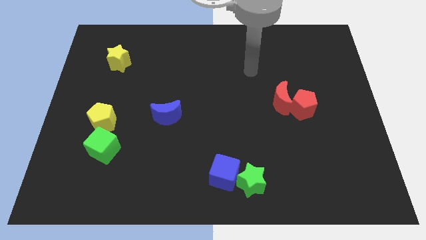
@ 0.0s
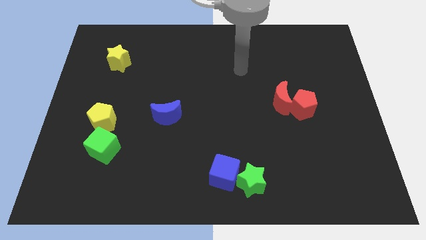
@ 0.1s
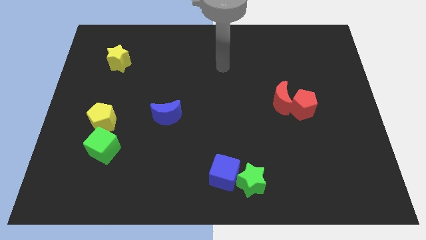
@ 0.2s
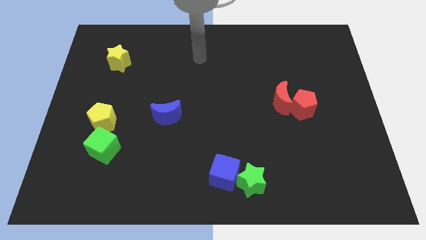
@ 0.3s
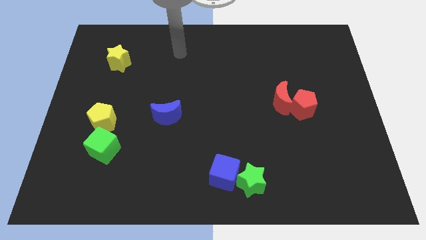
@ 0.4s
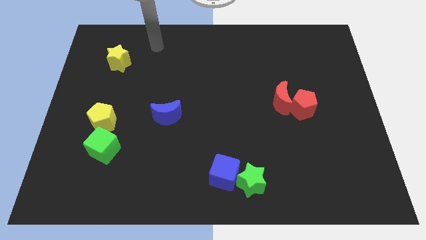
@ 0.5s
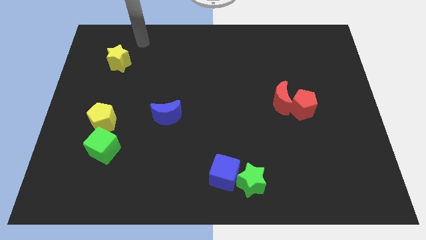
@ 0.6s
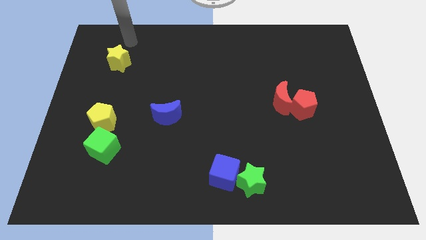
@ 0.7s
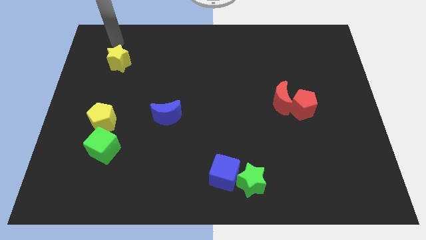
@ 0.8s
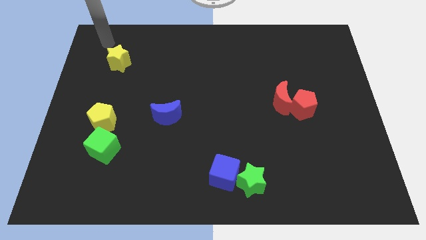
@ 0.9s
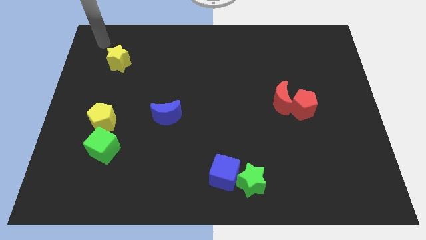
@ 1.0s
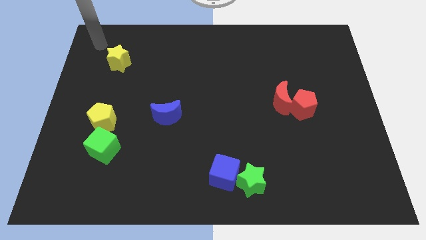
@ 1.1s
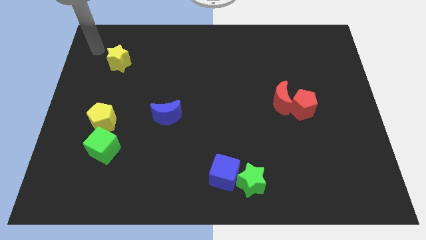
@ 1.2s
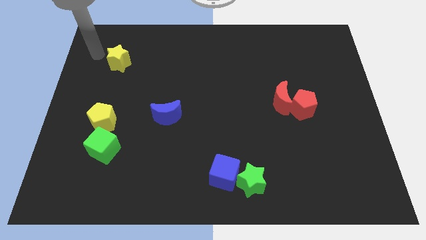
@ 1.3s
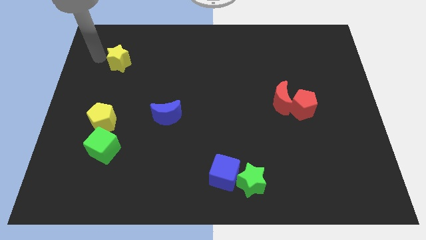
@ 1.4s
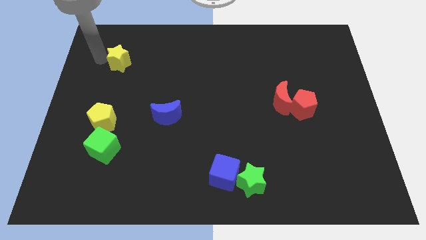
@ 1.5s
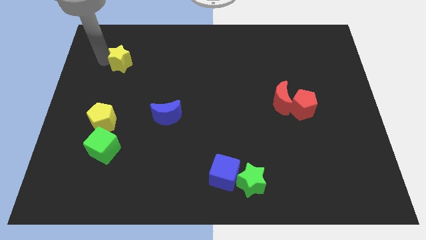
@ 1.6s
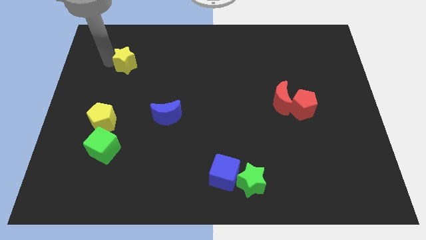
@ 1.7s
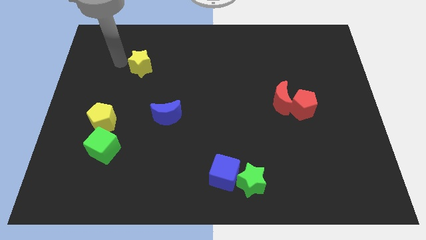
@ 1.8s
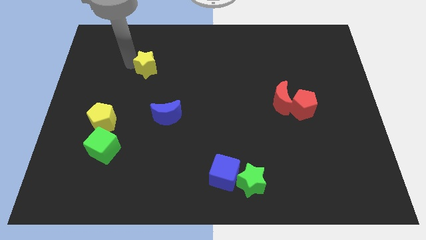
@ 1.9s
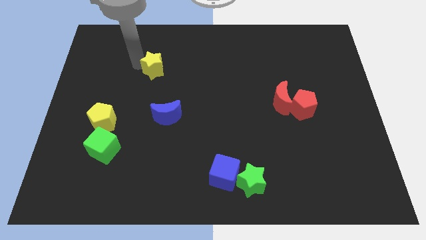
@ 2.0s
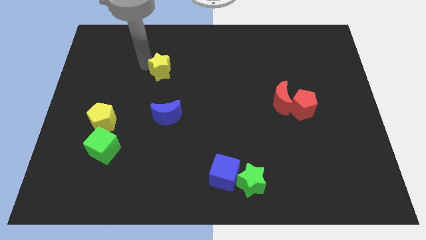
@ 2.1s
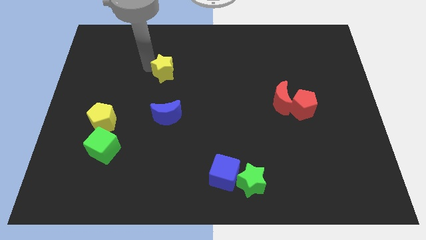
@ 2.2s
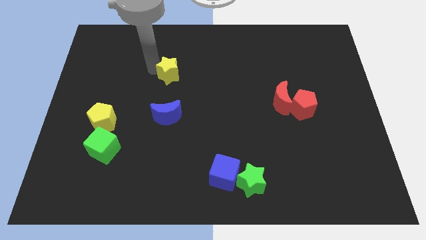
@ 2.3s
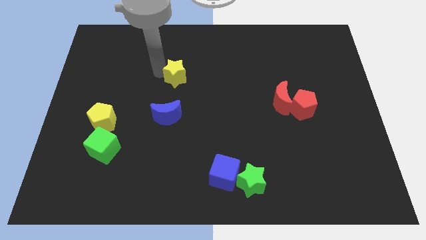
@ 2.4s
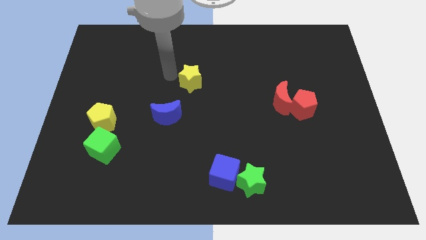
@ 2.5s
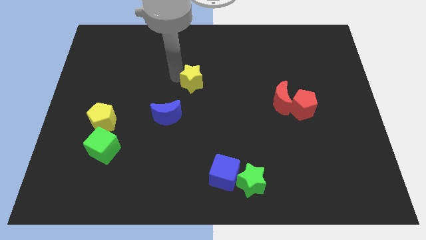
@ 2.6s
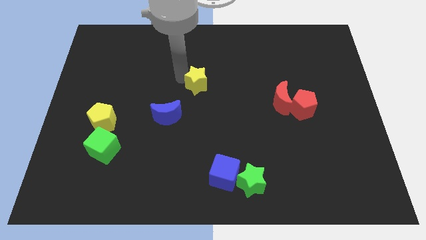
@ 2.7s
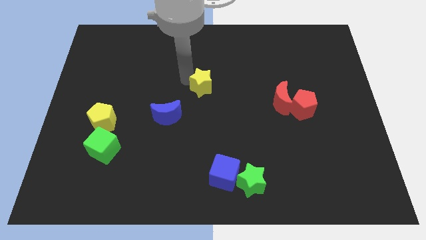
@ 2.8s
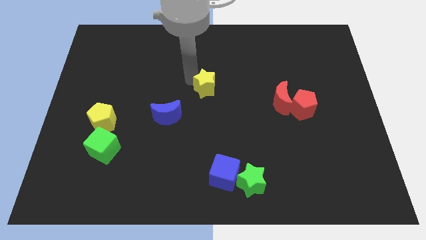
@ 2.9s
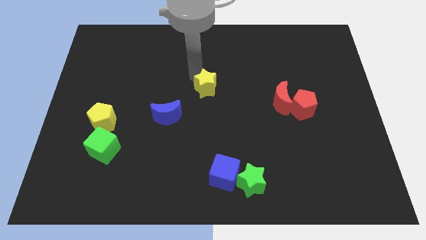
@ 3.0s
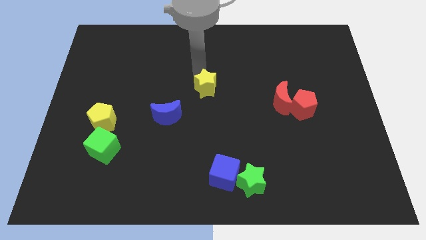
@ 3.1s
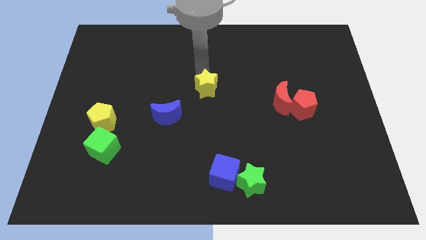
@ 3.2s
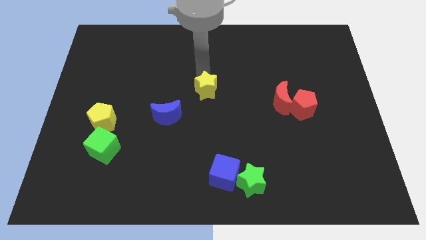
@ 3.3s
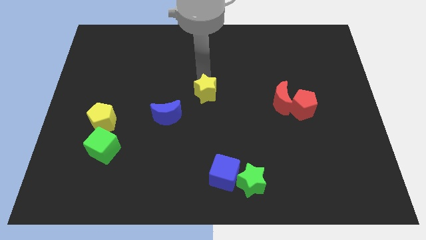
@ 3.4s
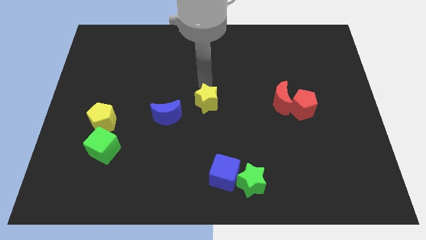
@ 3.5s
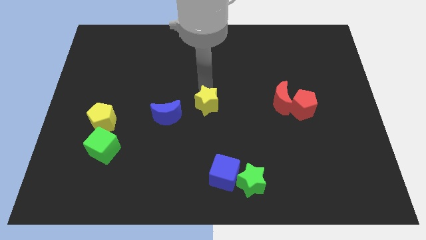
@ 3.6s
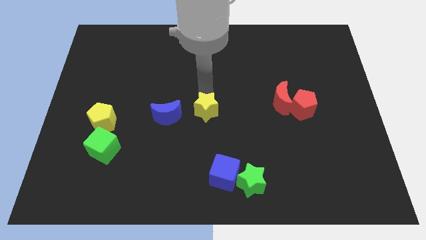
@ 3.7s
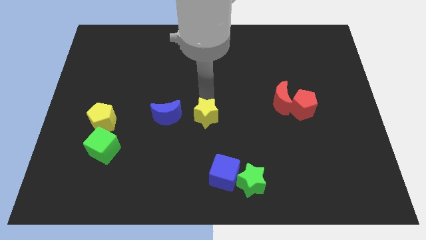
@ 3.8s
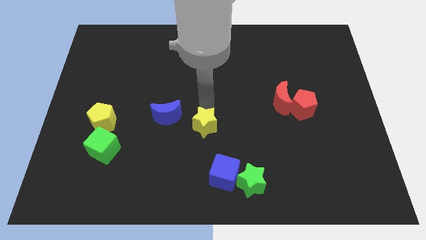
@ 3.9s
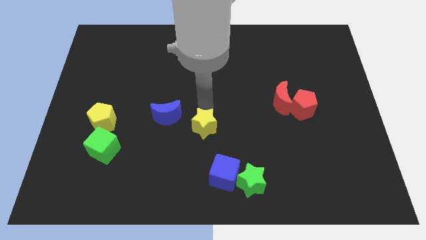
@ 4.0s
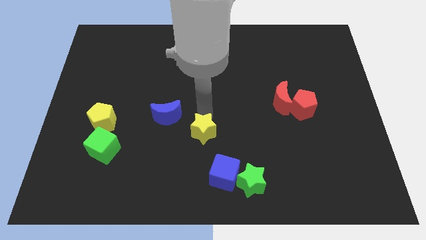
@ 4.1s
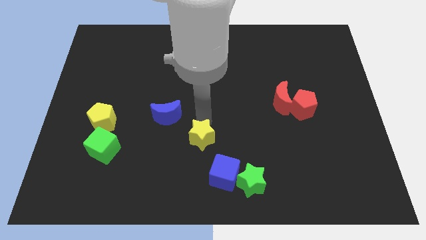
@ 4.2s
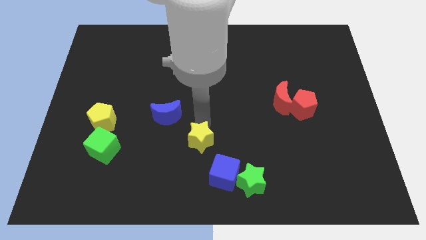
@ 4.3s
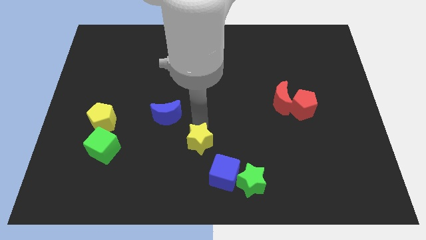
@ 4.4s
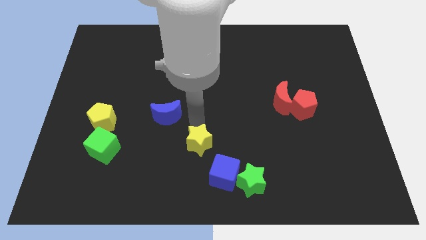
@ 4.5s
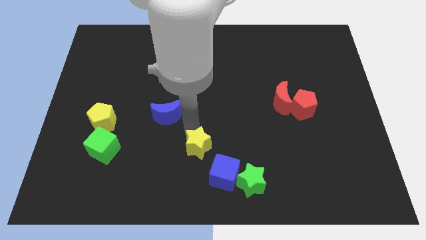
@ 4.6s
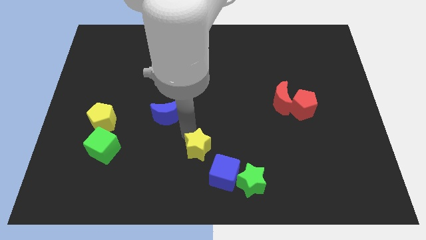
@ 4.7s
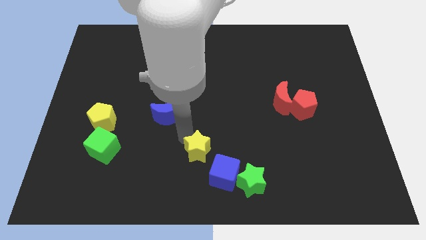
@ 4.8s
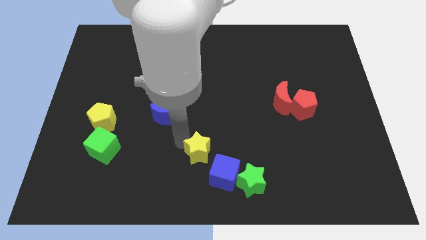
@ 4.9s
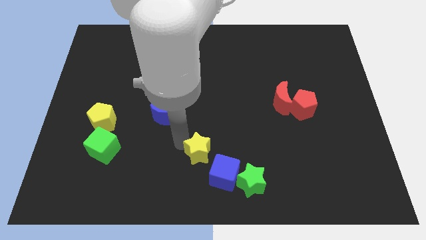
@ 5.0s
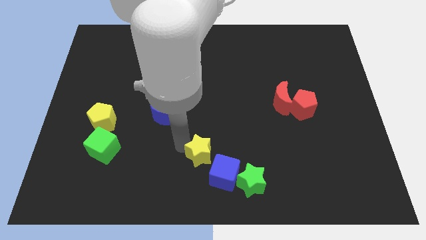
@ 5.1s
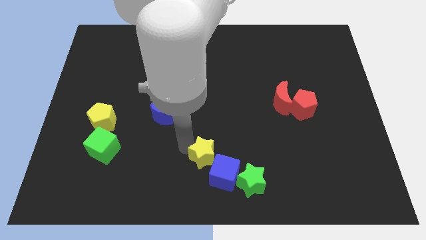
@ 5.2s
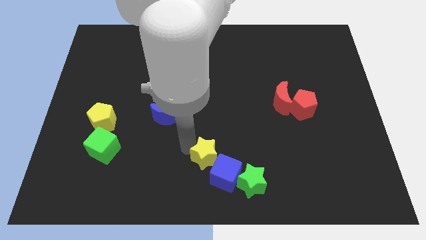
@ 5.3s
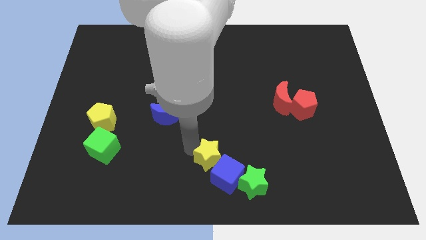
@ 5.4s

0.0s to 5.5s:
move the yellow star towards the blue cube

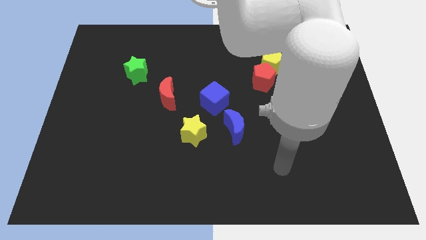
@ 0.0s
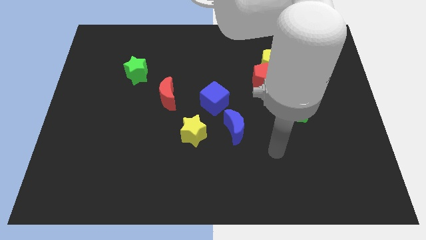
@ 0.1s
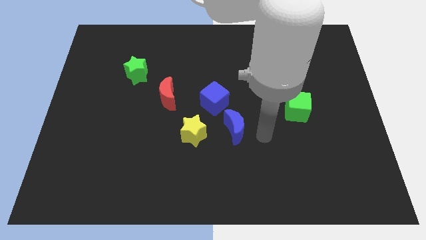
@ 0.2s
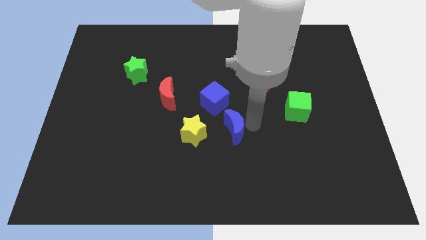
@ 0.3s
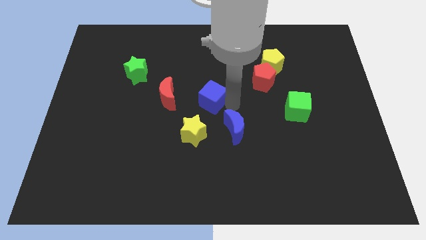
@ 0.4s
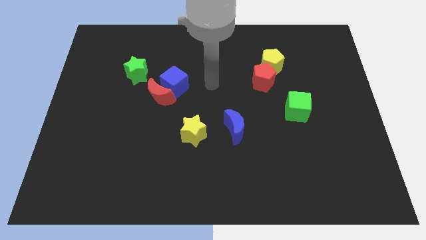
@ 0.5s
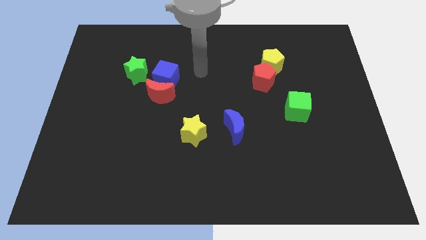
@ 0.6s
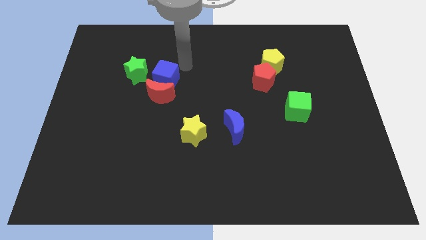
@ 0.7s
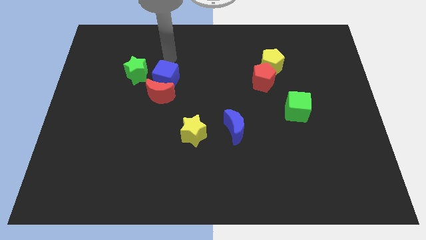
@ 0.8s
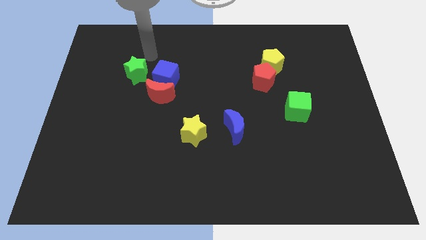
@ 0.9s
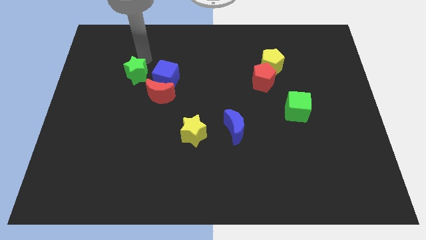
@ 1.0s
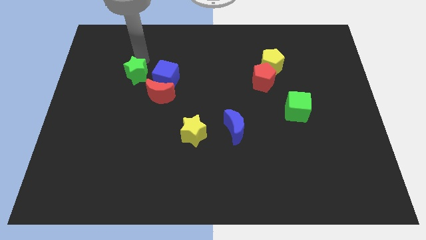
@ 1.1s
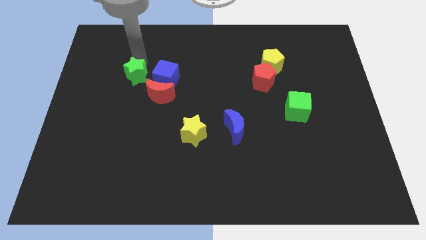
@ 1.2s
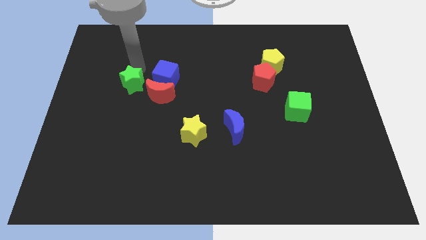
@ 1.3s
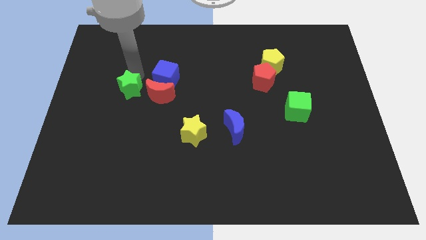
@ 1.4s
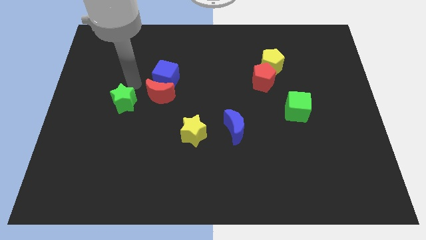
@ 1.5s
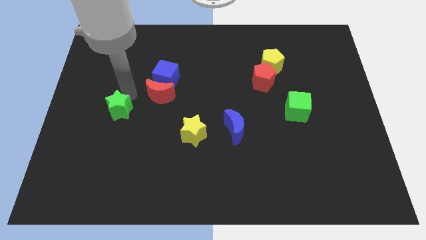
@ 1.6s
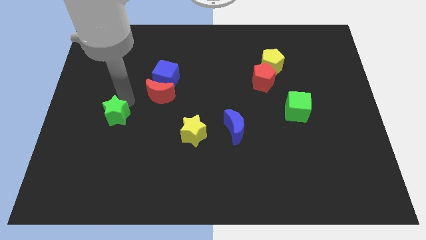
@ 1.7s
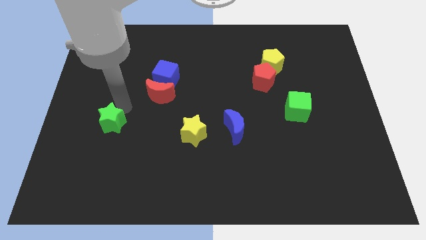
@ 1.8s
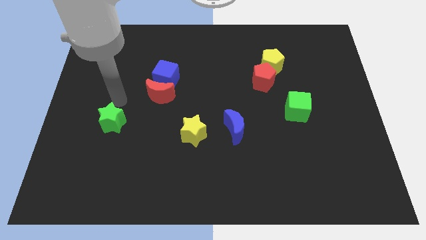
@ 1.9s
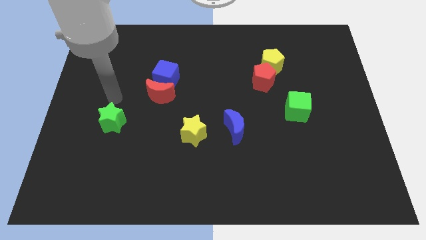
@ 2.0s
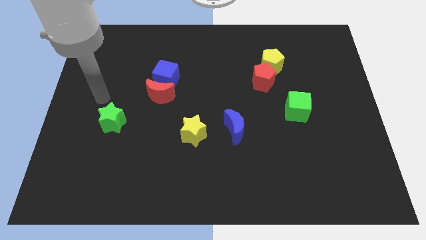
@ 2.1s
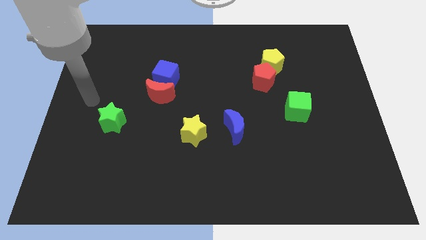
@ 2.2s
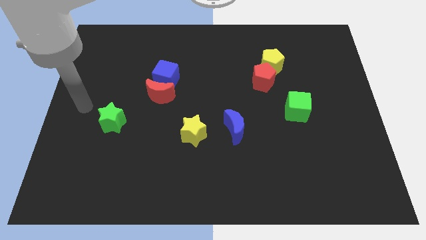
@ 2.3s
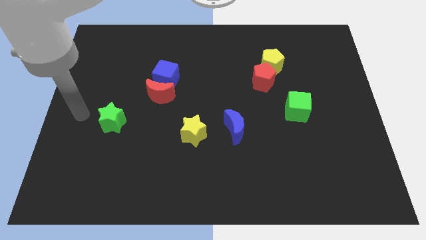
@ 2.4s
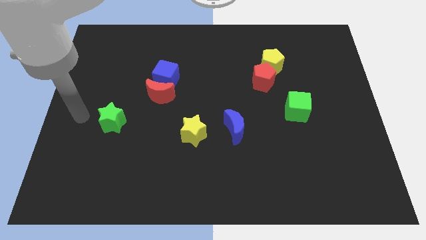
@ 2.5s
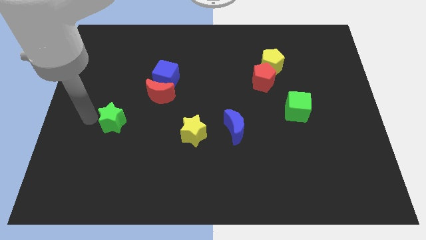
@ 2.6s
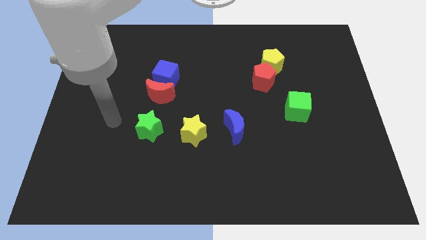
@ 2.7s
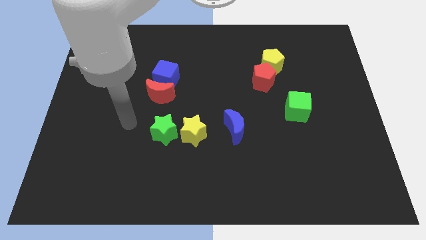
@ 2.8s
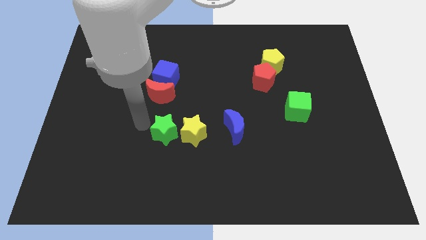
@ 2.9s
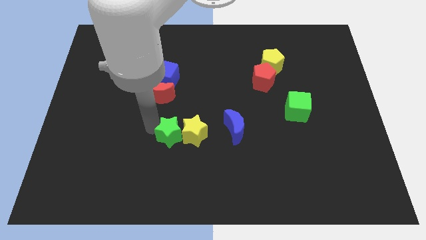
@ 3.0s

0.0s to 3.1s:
put the green star close to the yellow star
